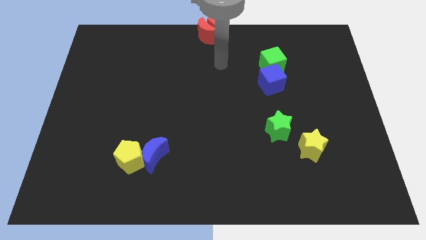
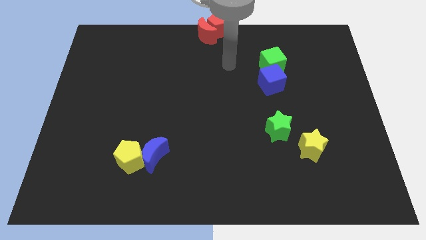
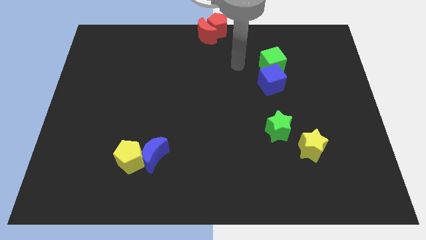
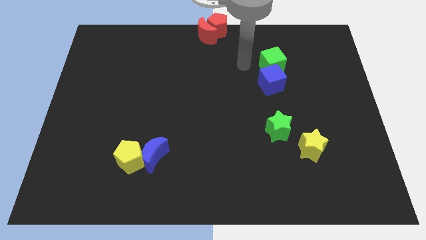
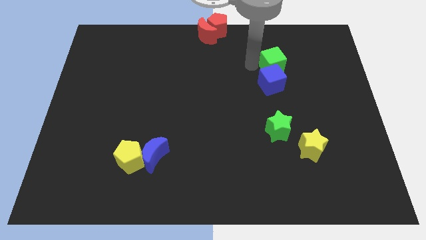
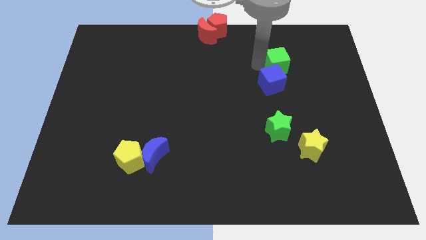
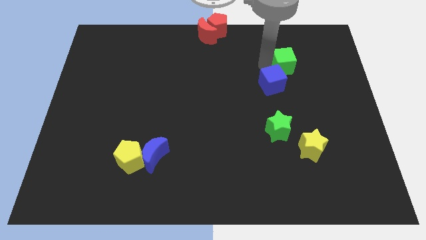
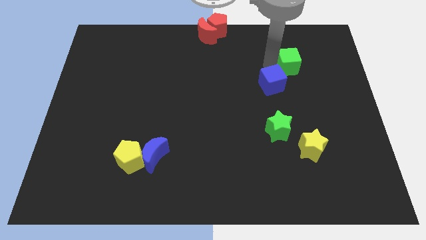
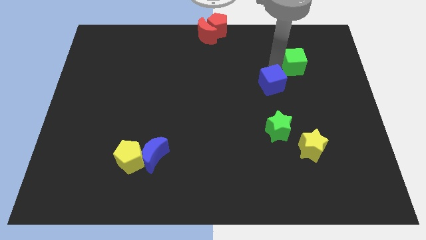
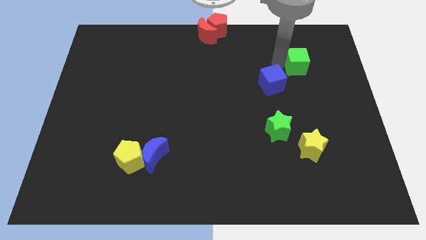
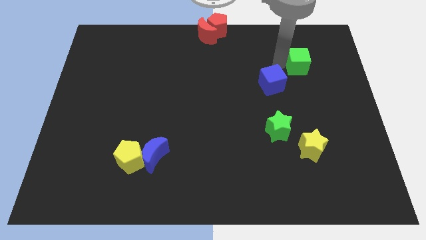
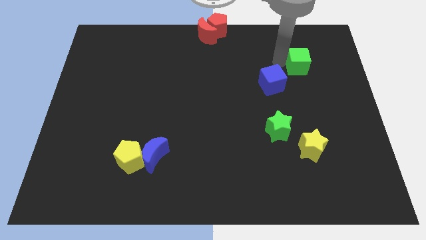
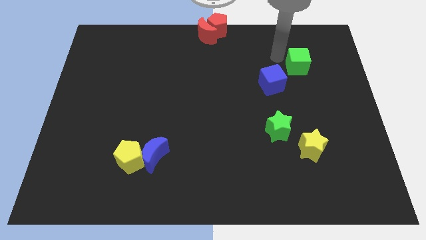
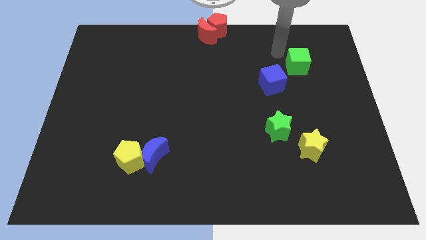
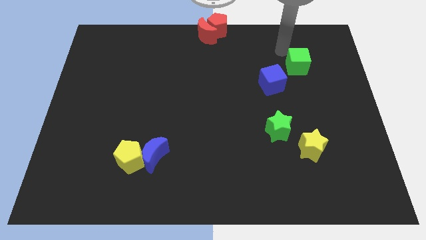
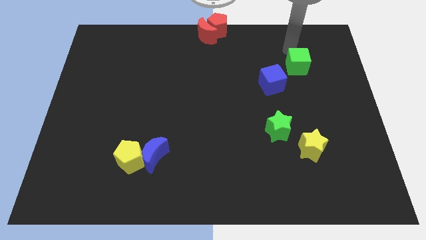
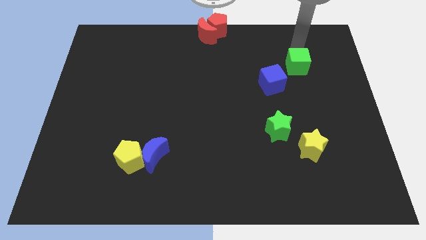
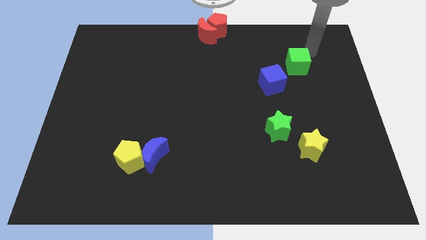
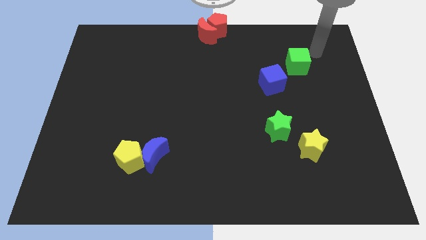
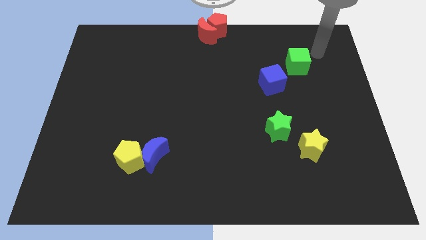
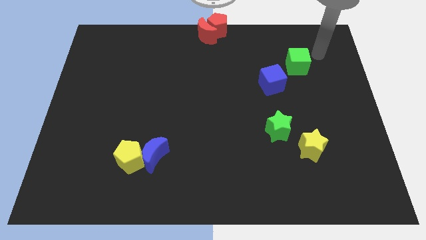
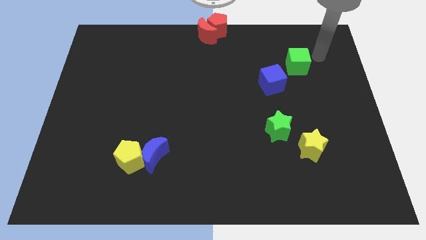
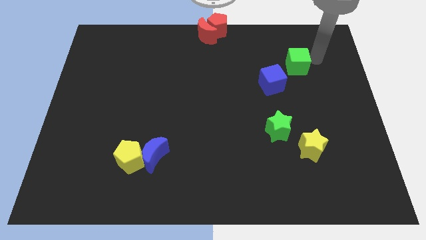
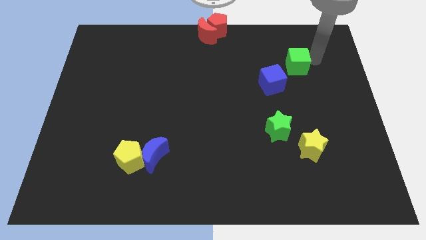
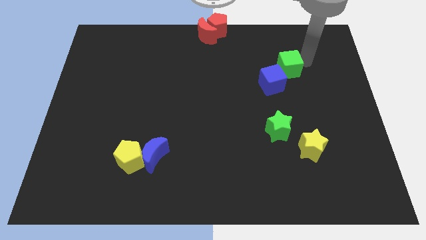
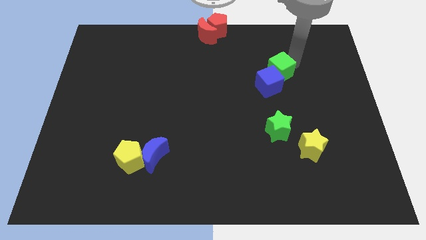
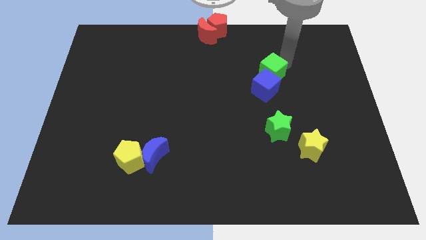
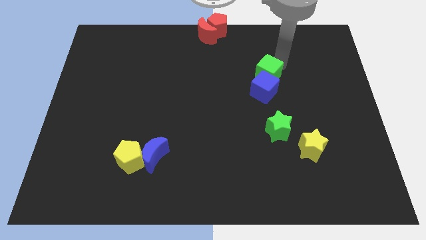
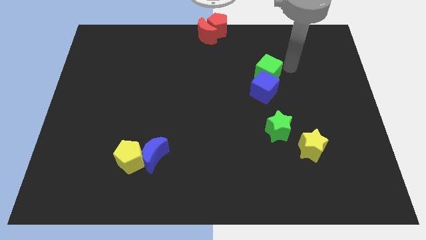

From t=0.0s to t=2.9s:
push the green cube into blue cube

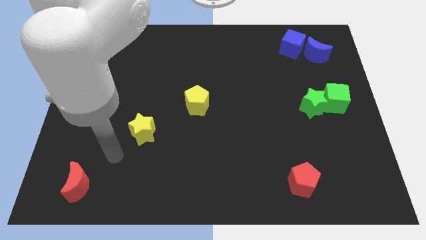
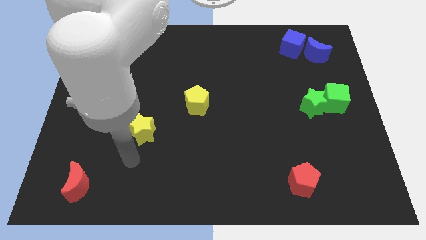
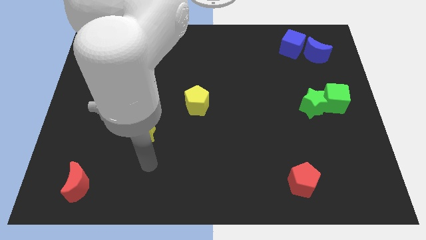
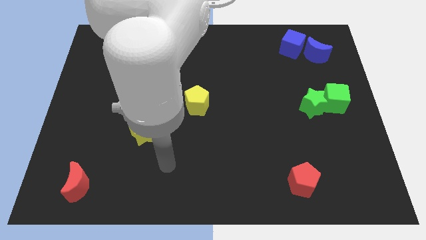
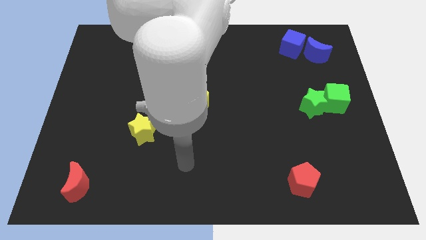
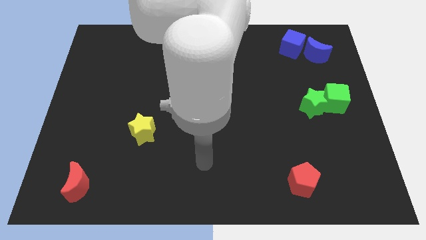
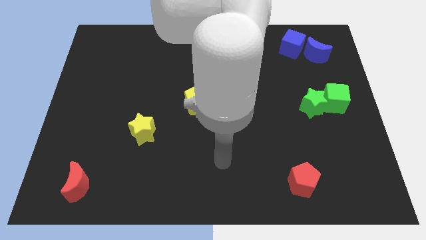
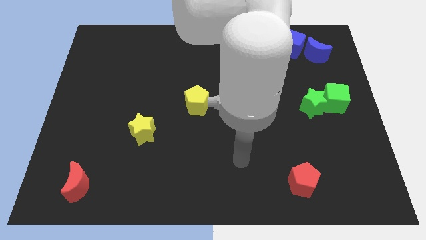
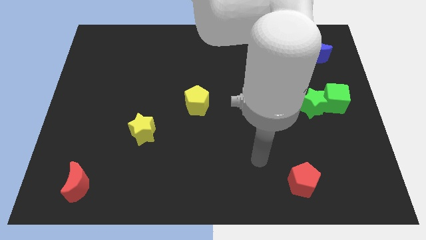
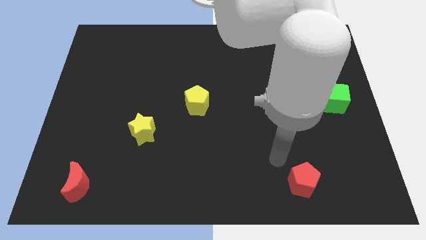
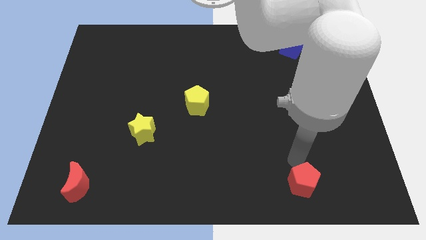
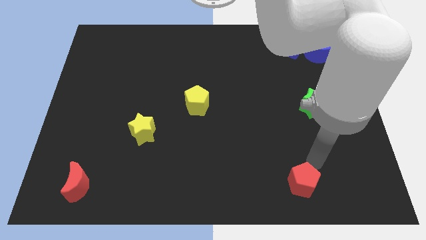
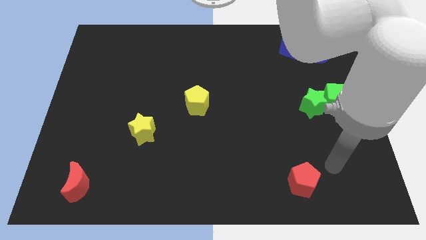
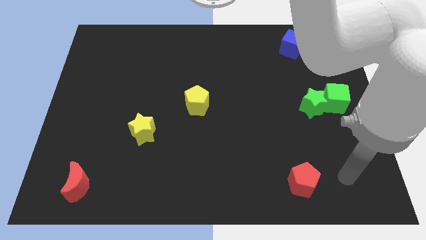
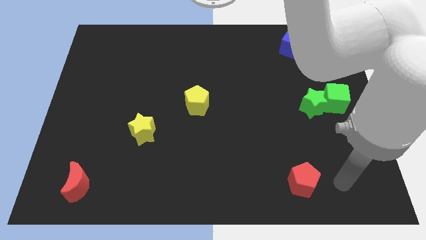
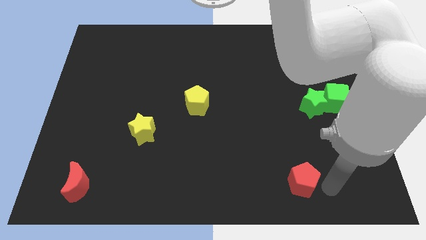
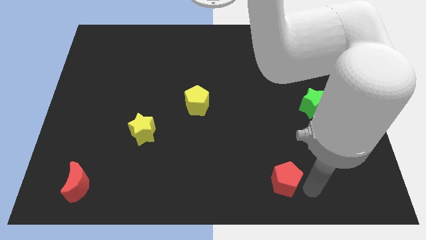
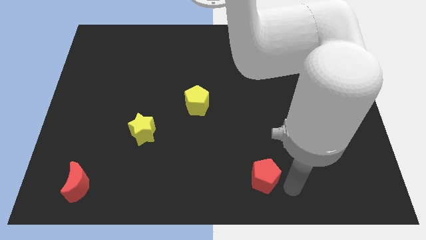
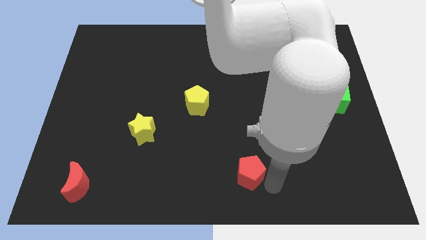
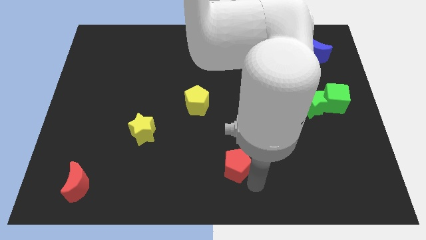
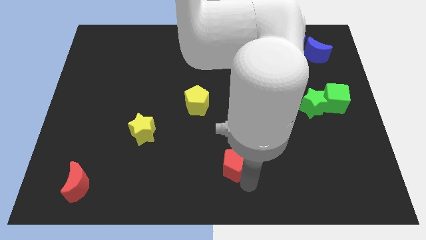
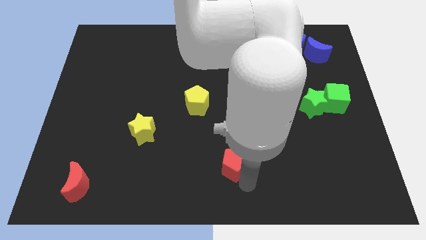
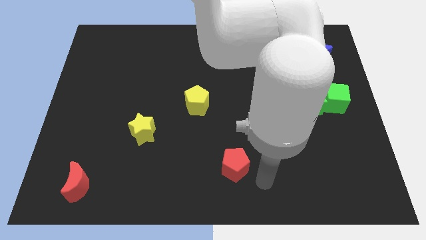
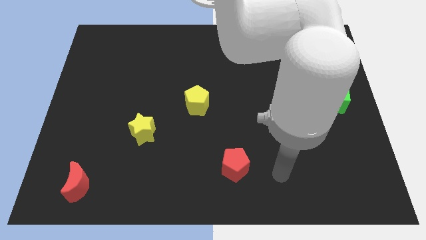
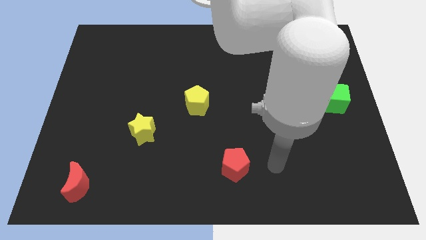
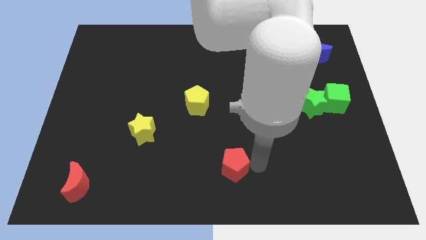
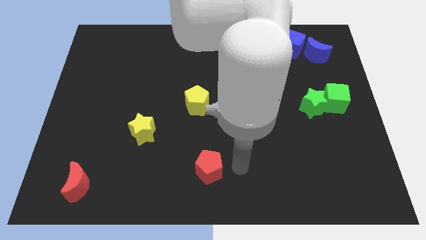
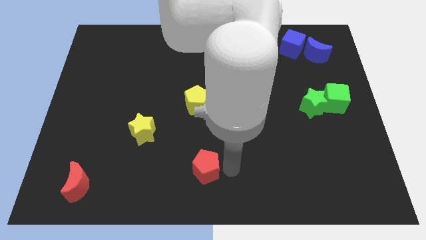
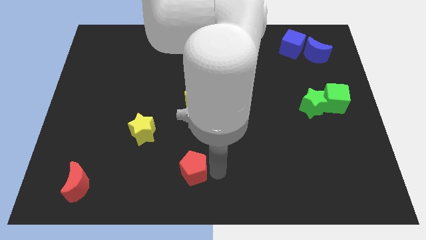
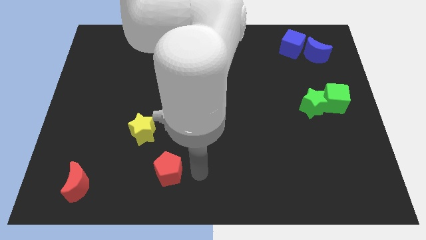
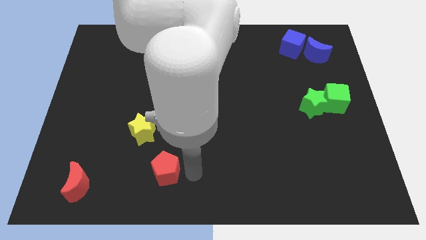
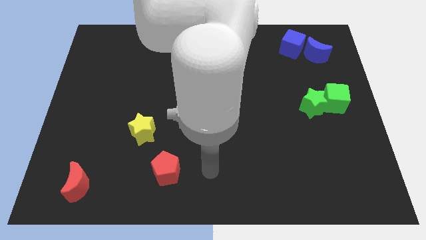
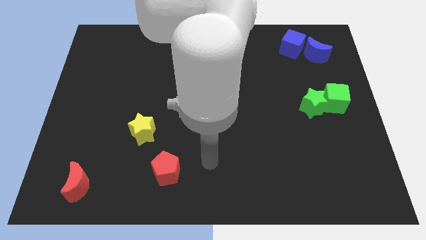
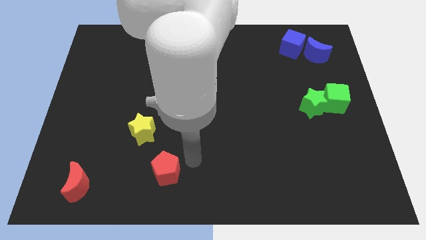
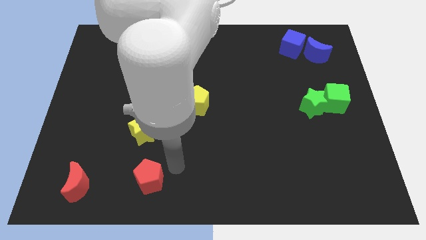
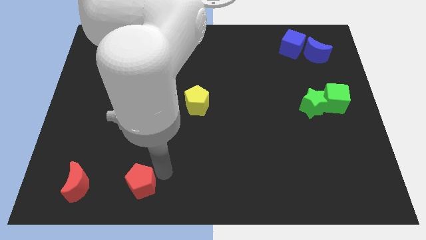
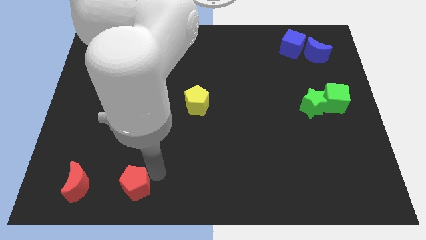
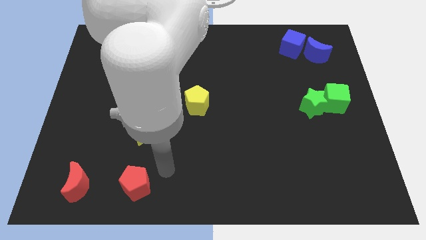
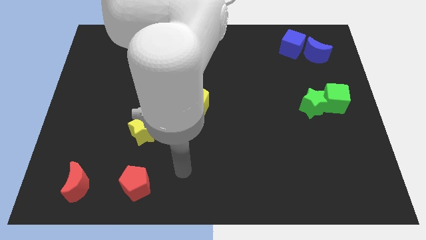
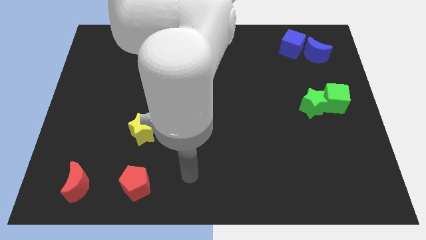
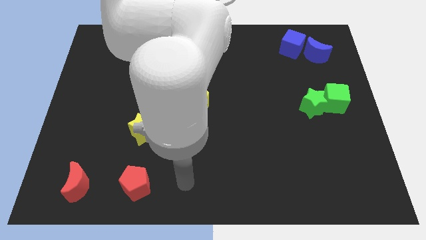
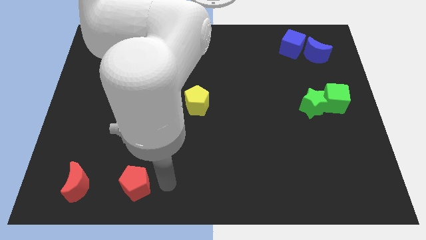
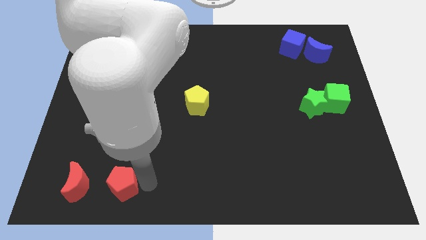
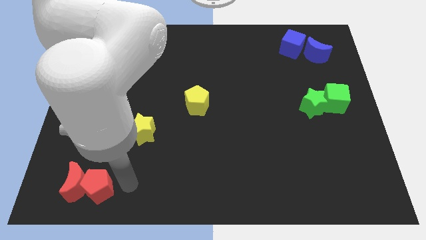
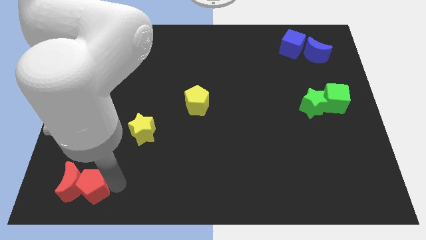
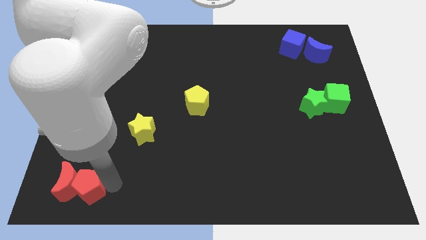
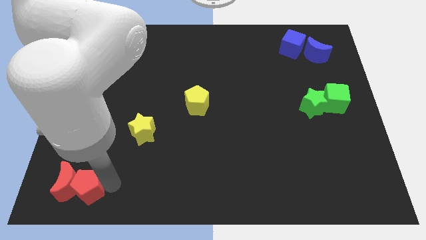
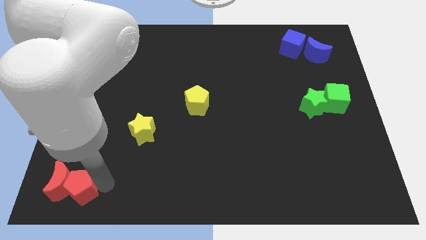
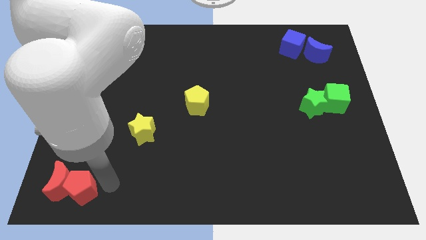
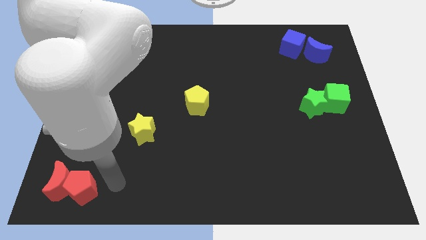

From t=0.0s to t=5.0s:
push the red pentagon into the red crescent

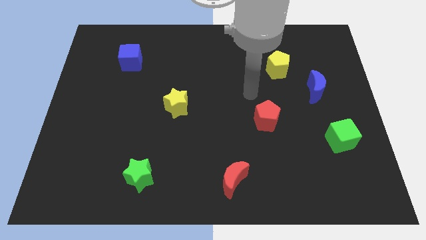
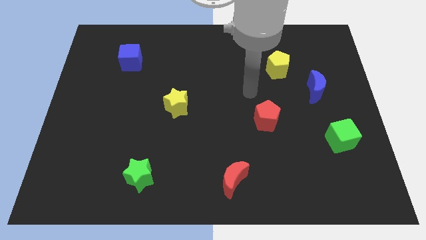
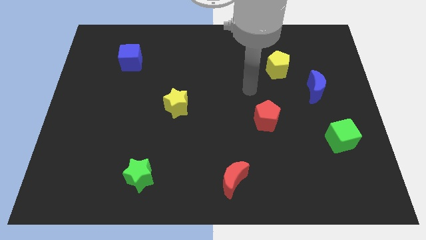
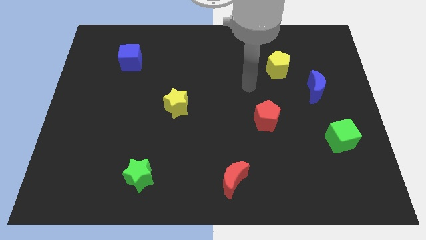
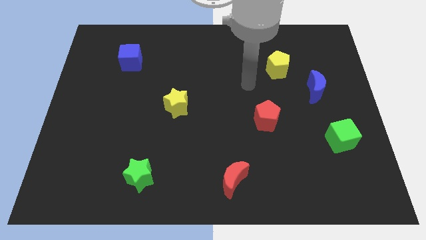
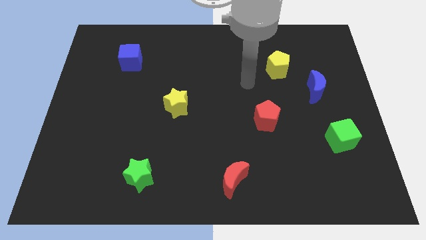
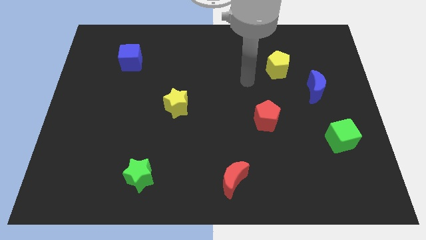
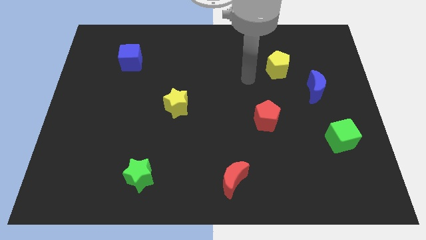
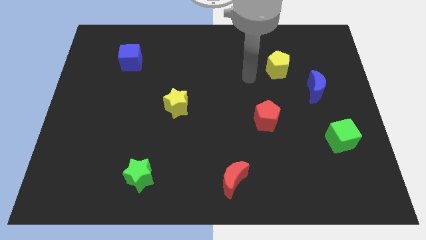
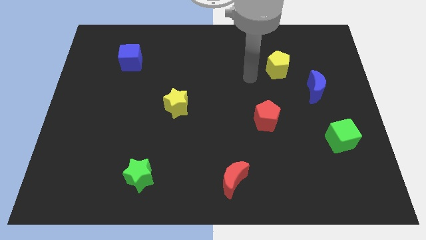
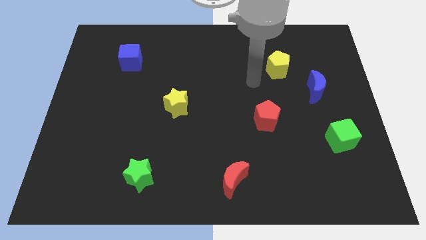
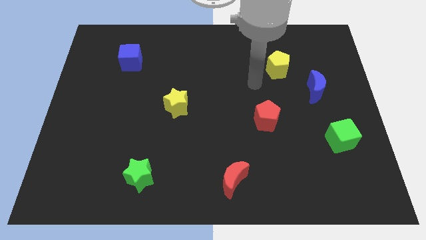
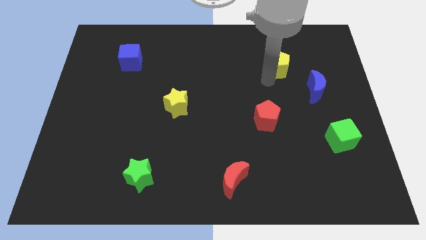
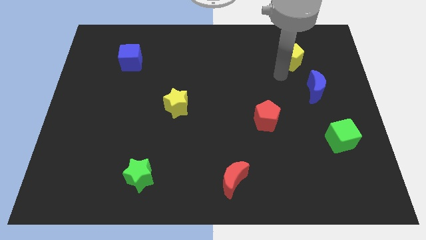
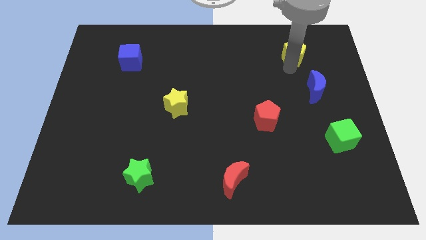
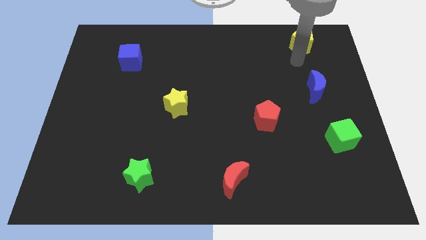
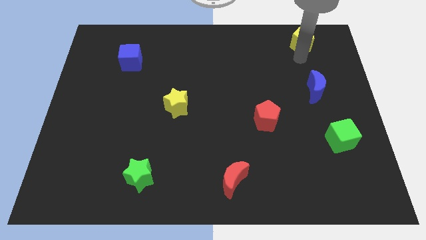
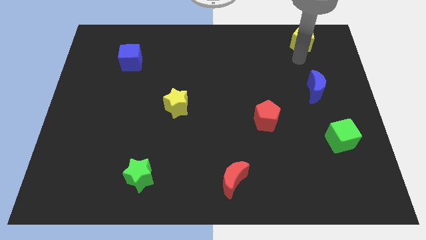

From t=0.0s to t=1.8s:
move the yellow pentagon towards top right side of the board
